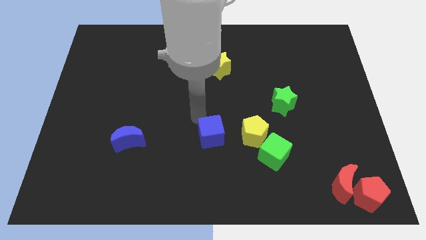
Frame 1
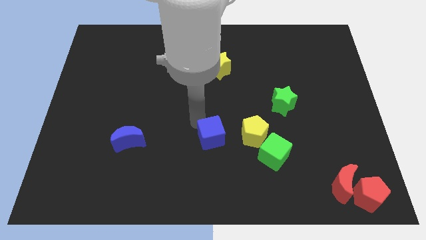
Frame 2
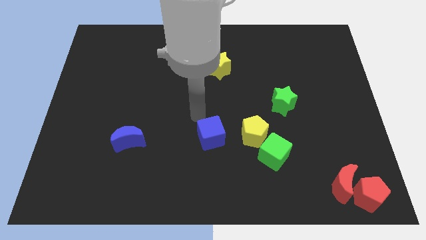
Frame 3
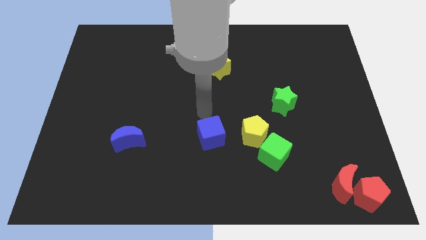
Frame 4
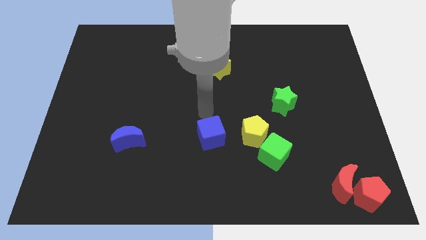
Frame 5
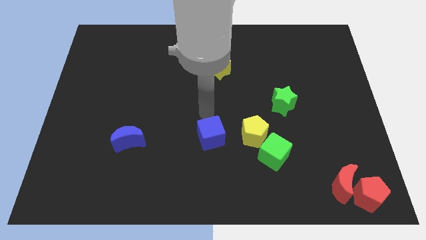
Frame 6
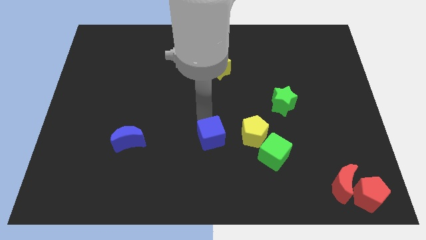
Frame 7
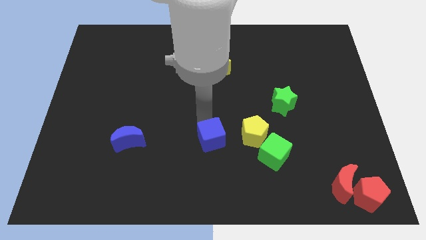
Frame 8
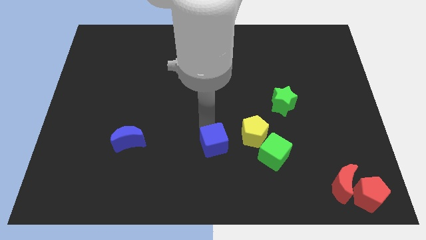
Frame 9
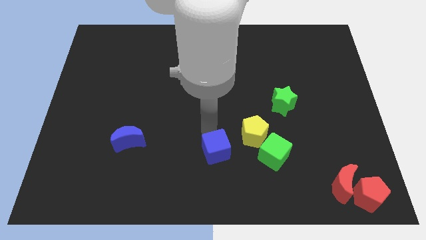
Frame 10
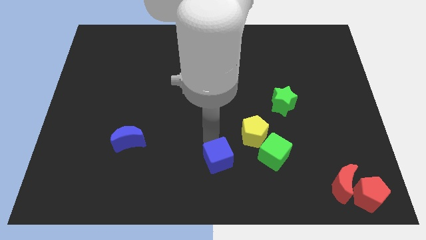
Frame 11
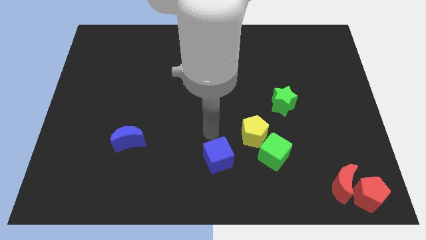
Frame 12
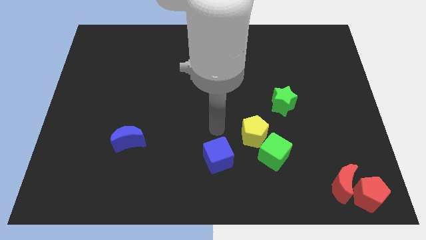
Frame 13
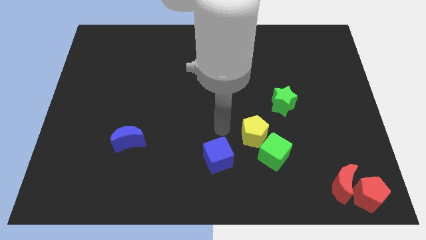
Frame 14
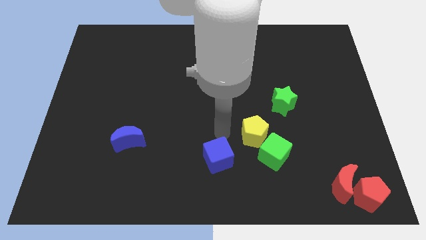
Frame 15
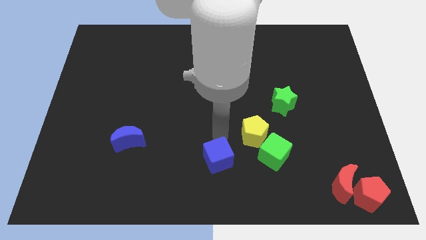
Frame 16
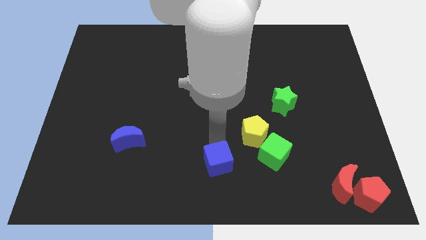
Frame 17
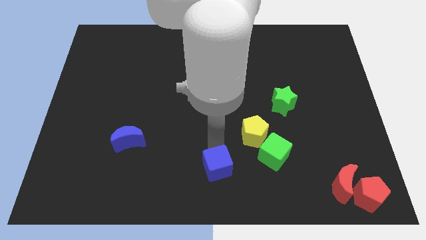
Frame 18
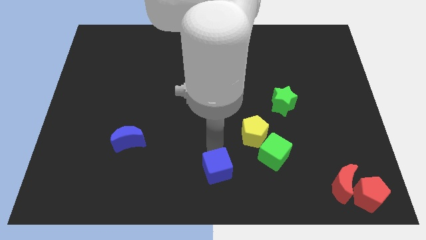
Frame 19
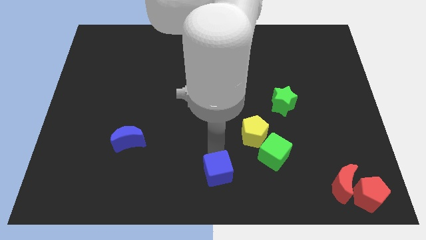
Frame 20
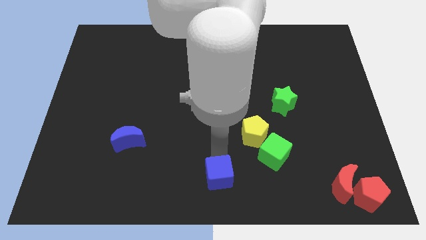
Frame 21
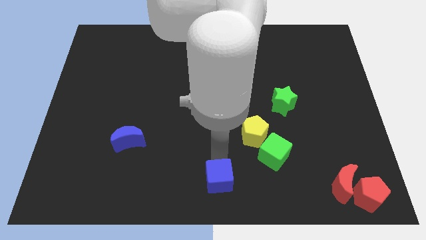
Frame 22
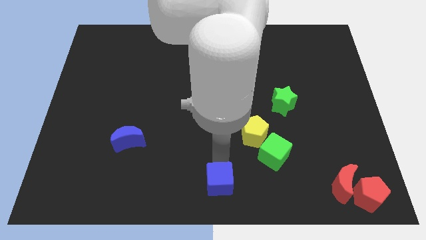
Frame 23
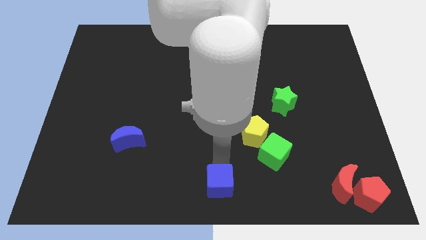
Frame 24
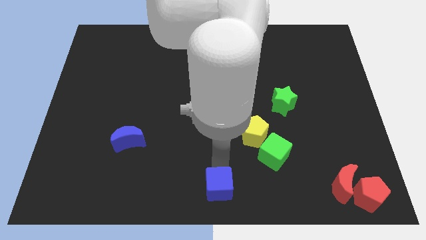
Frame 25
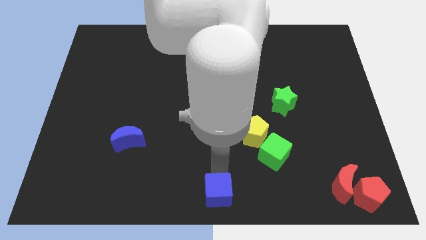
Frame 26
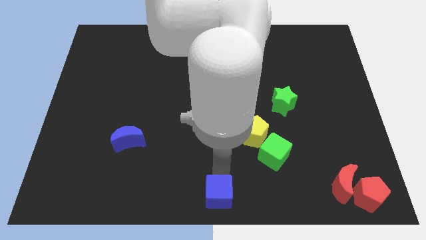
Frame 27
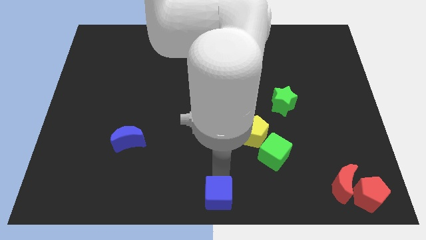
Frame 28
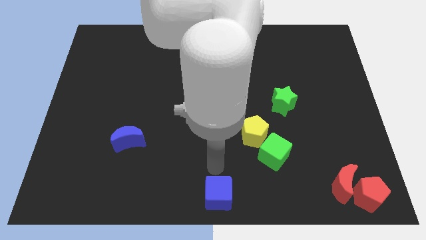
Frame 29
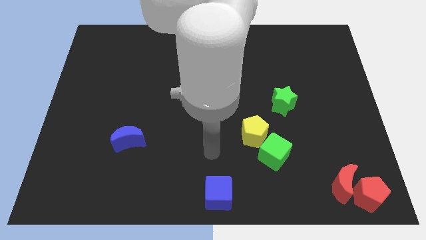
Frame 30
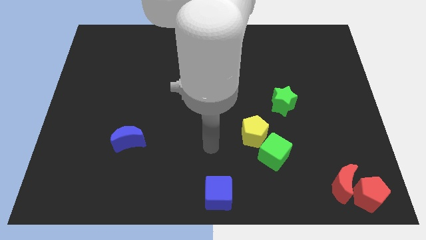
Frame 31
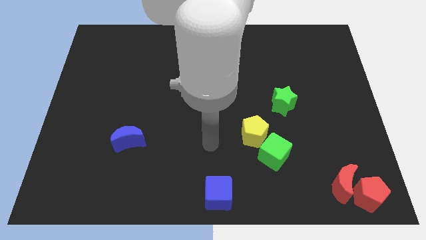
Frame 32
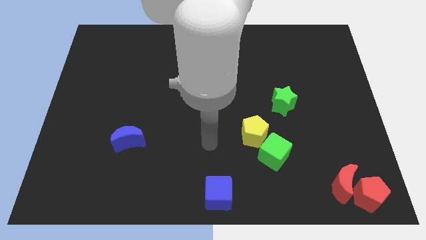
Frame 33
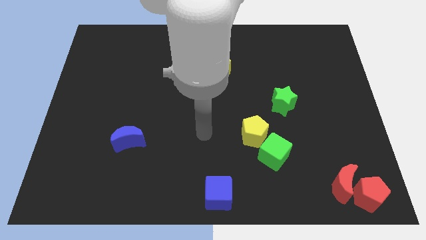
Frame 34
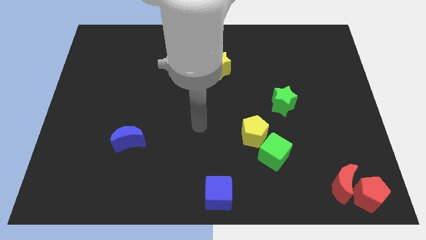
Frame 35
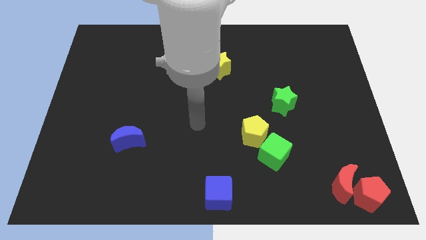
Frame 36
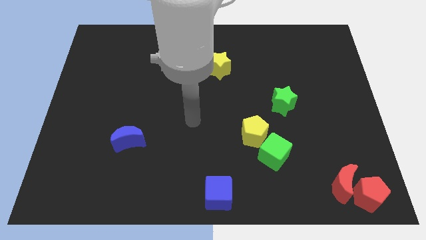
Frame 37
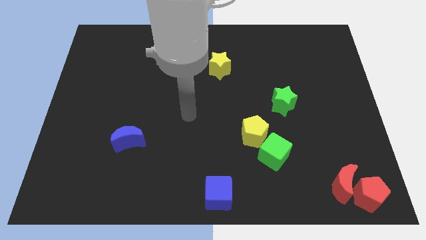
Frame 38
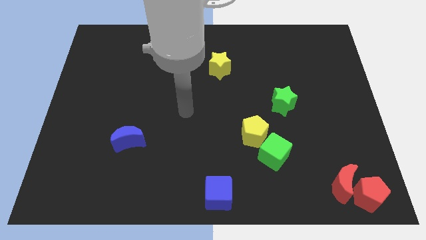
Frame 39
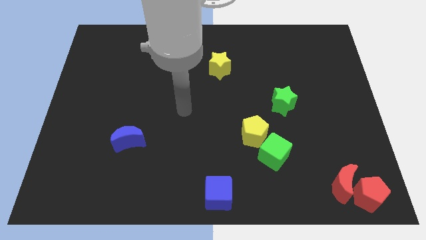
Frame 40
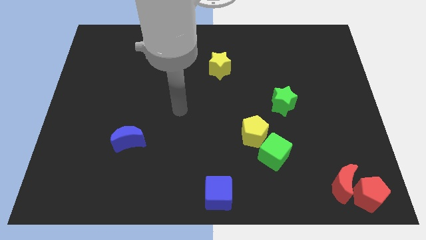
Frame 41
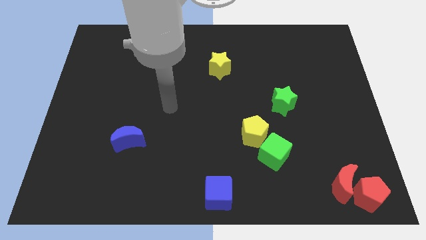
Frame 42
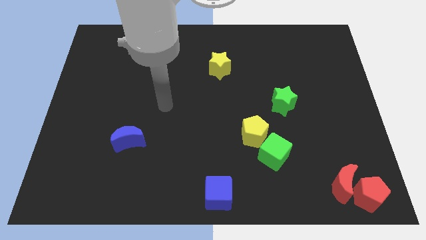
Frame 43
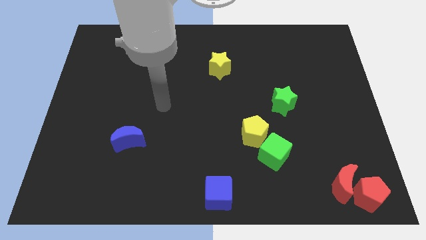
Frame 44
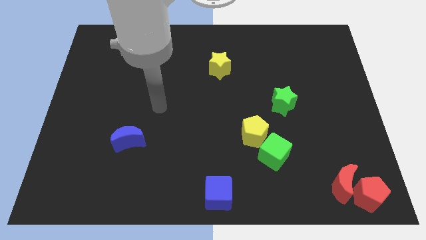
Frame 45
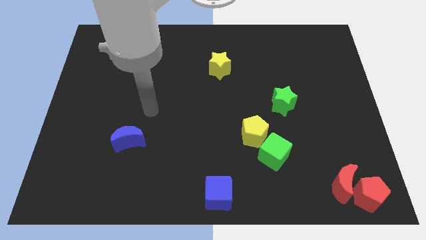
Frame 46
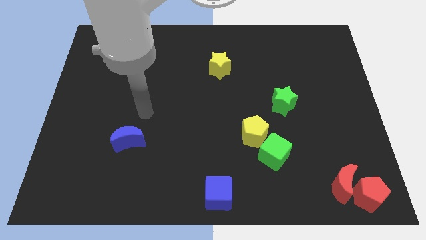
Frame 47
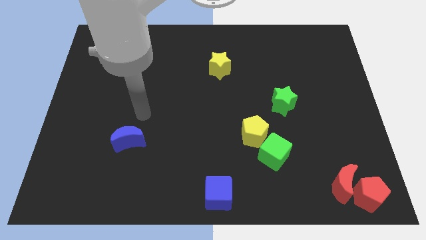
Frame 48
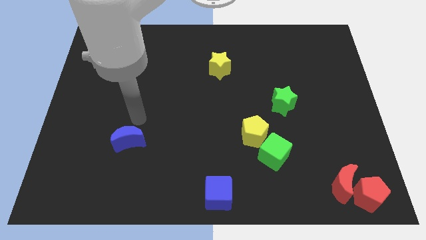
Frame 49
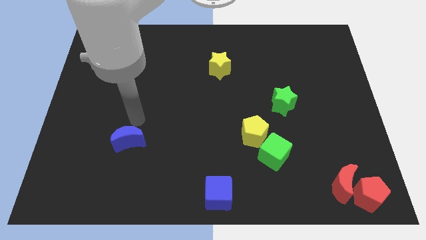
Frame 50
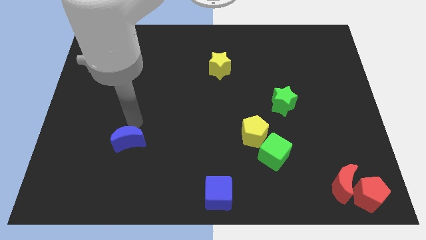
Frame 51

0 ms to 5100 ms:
place blue cube to the bottom center

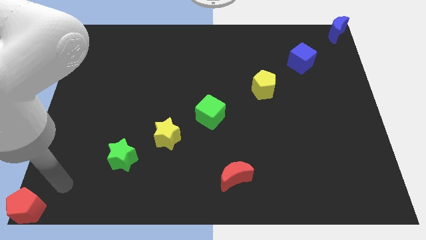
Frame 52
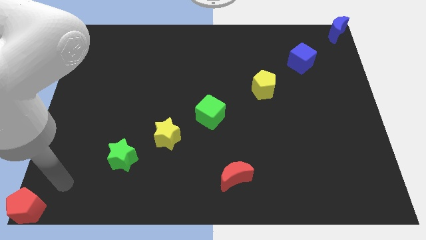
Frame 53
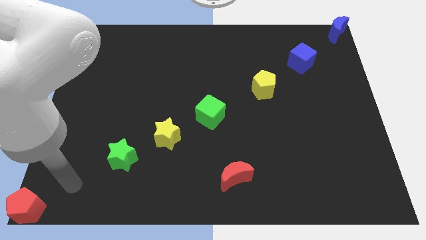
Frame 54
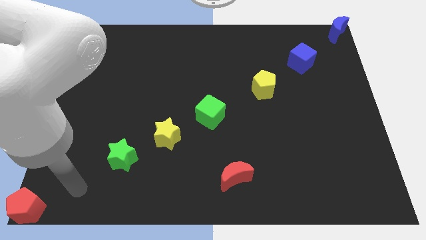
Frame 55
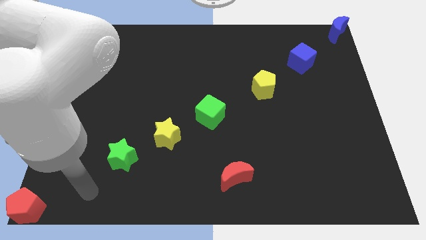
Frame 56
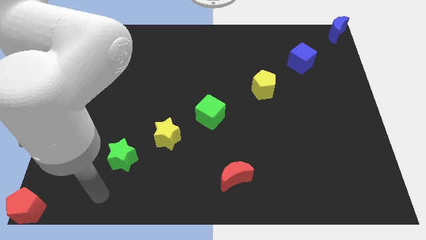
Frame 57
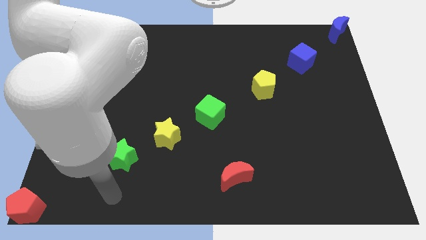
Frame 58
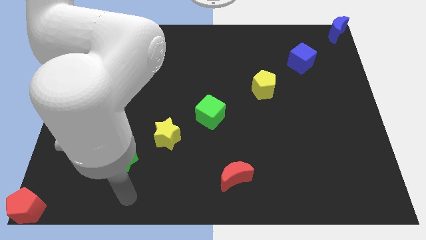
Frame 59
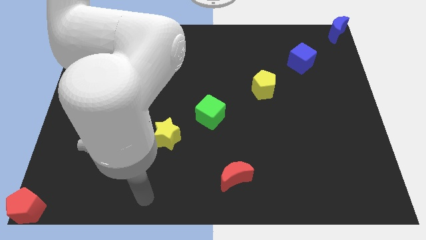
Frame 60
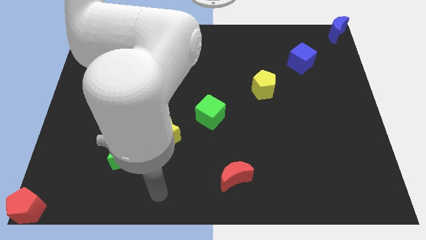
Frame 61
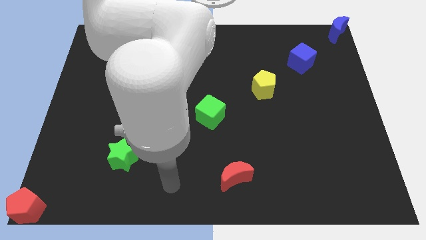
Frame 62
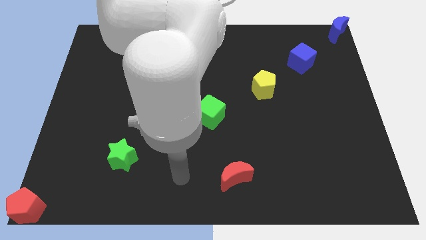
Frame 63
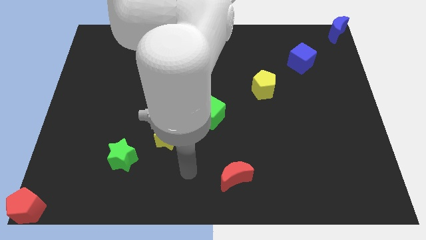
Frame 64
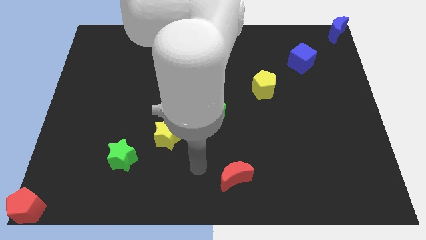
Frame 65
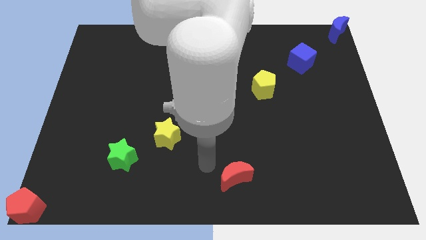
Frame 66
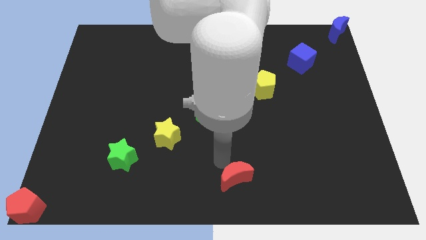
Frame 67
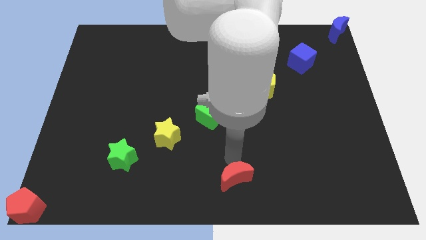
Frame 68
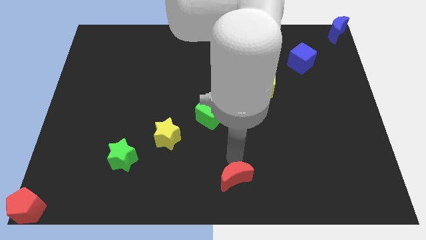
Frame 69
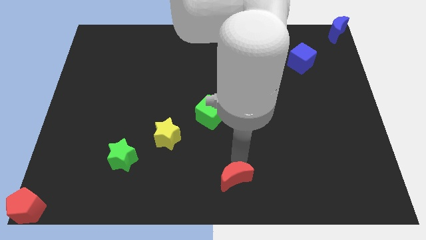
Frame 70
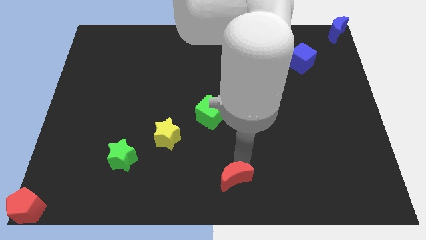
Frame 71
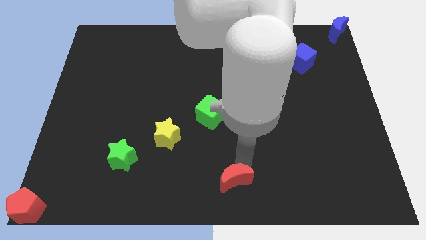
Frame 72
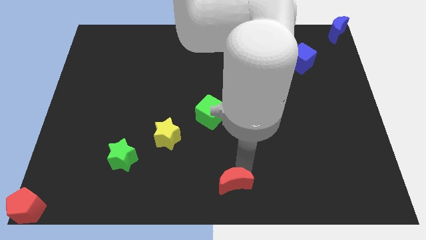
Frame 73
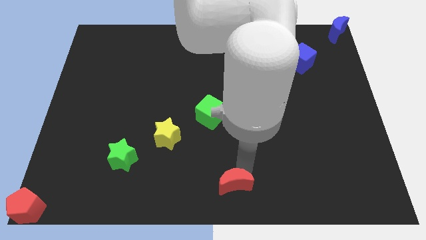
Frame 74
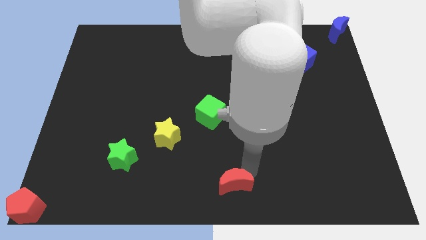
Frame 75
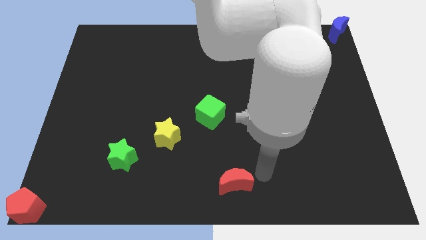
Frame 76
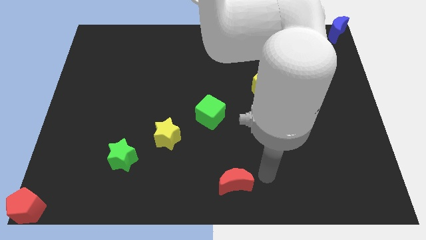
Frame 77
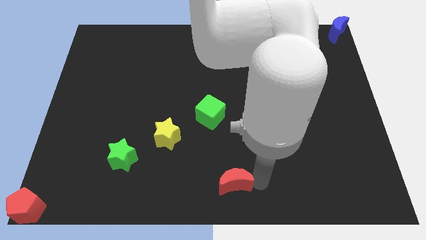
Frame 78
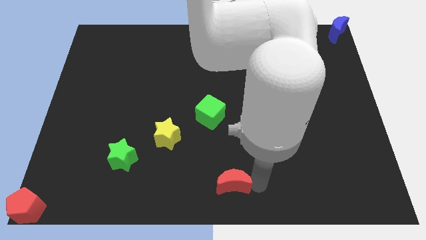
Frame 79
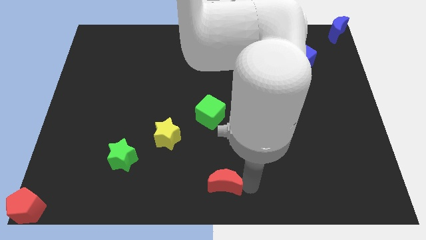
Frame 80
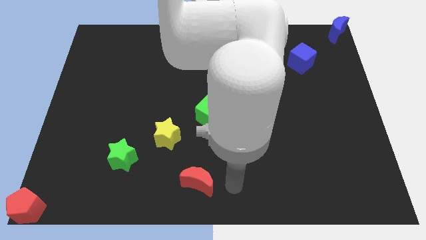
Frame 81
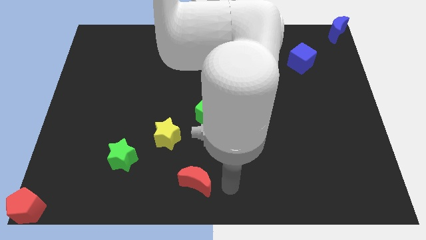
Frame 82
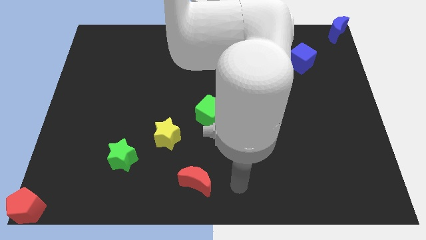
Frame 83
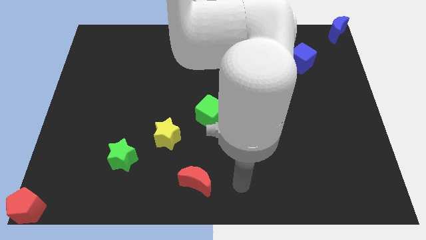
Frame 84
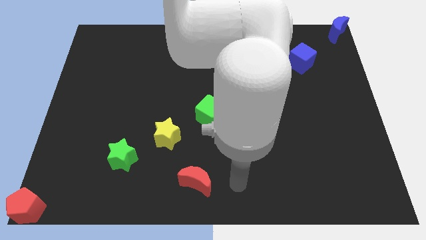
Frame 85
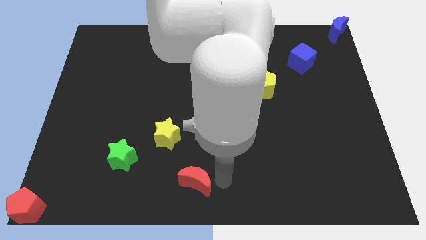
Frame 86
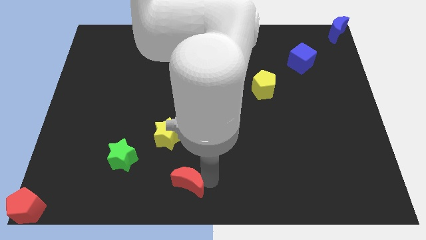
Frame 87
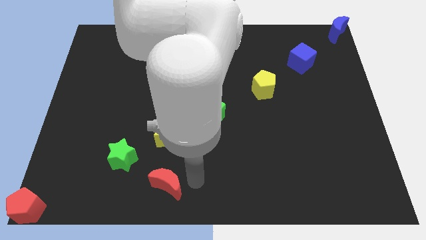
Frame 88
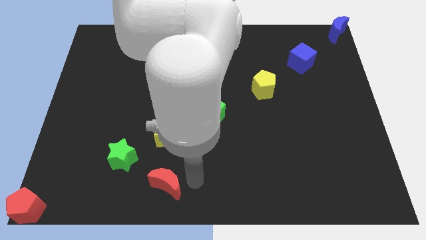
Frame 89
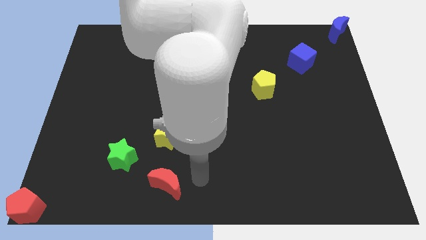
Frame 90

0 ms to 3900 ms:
move the red crescent towards the left side of the board
